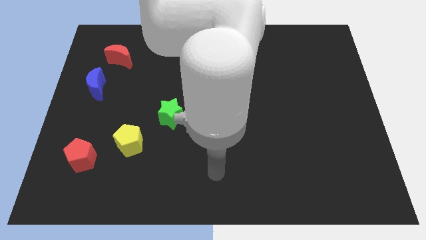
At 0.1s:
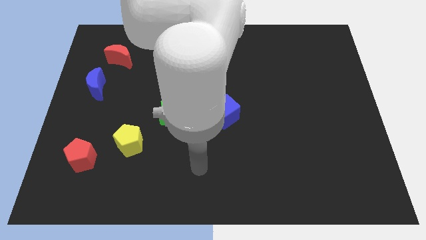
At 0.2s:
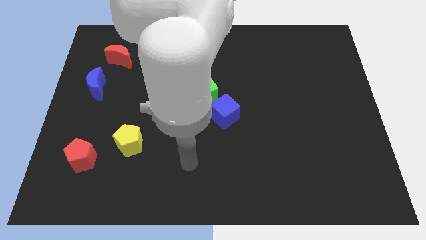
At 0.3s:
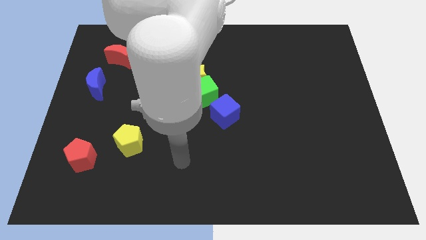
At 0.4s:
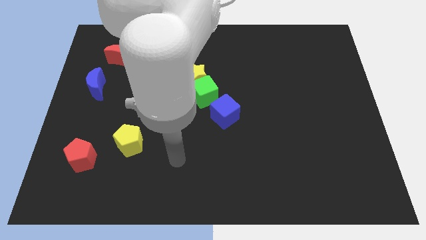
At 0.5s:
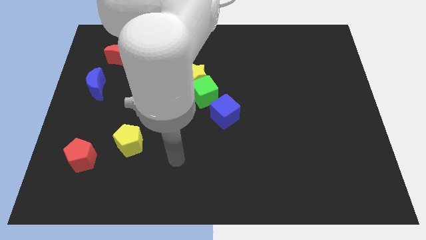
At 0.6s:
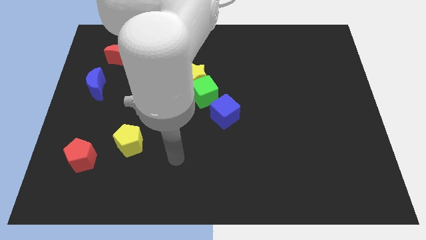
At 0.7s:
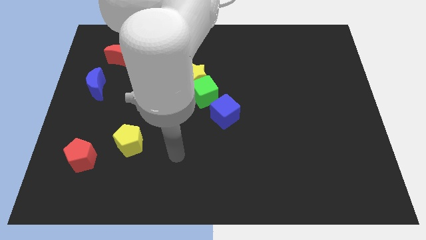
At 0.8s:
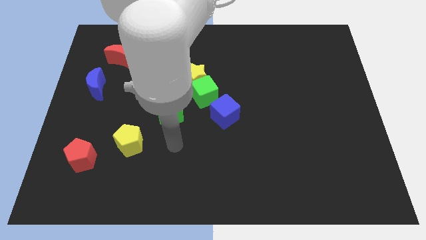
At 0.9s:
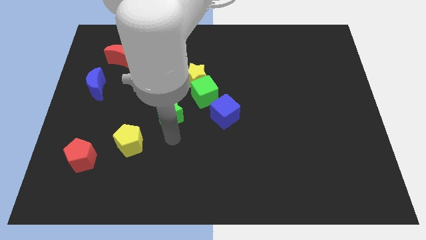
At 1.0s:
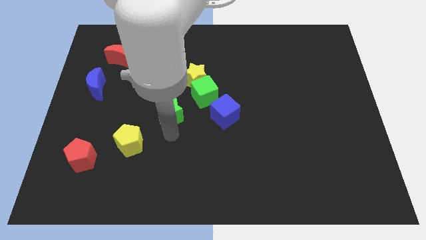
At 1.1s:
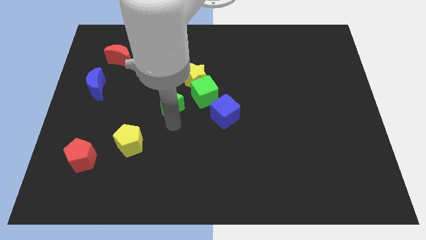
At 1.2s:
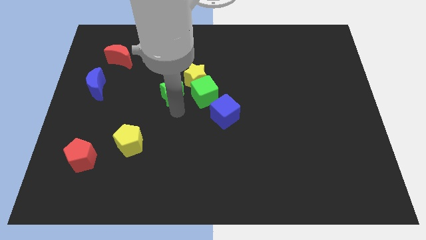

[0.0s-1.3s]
slide the green star parallel left to the green cube

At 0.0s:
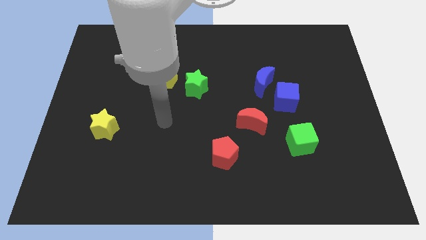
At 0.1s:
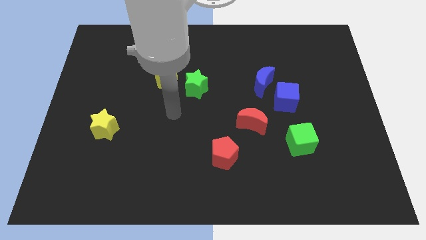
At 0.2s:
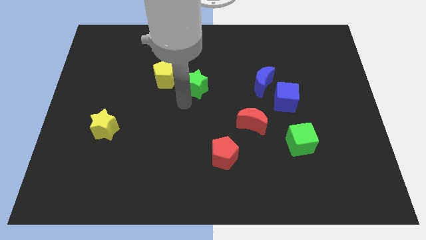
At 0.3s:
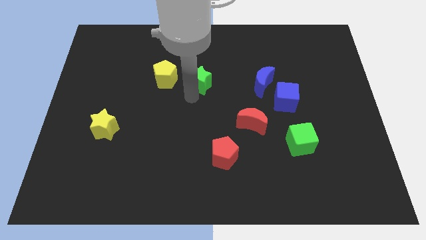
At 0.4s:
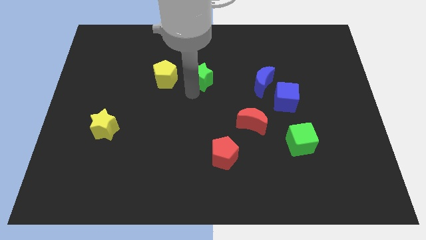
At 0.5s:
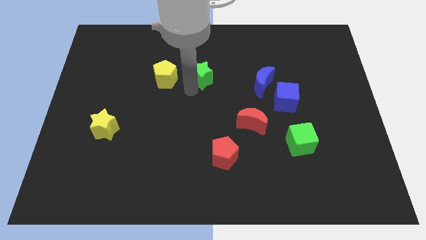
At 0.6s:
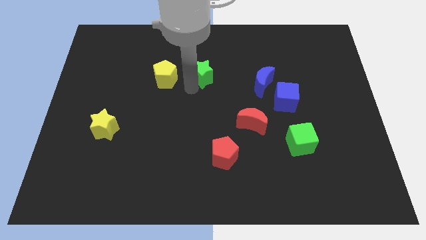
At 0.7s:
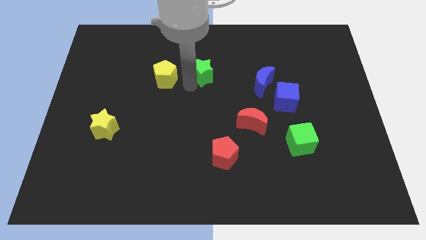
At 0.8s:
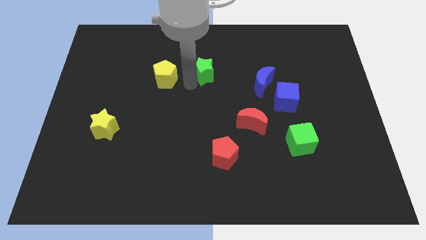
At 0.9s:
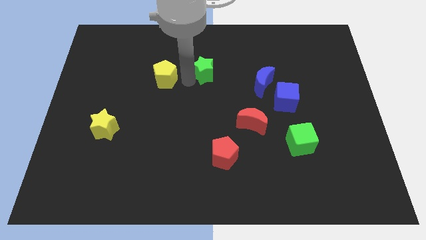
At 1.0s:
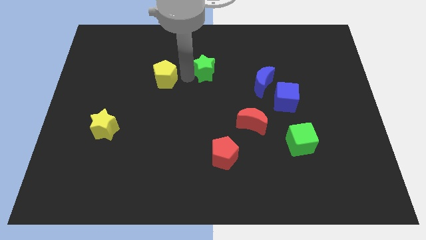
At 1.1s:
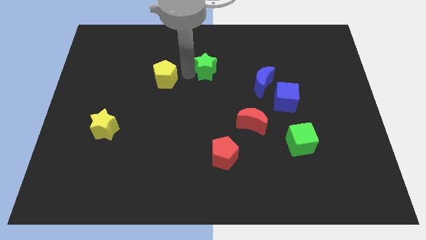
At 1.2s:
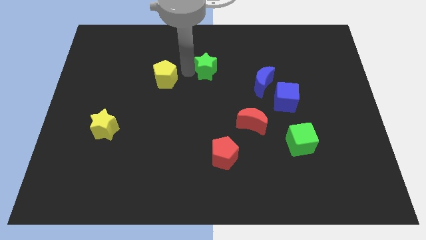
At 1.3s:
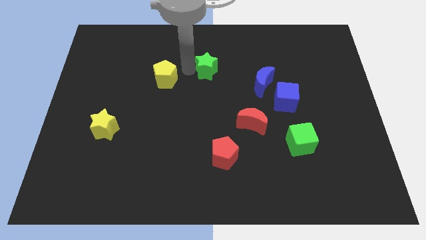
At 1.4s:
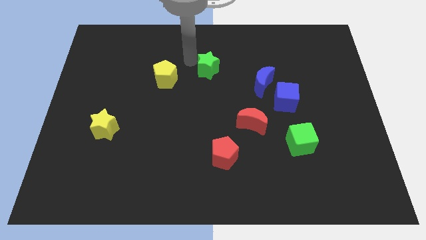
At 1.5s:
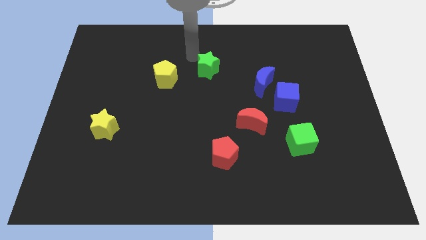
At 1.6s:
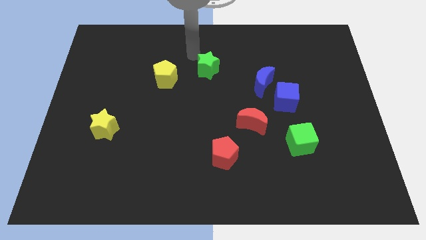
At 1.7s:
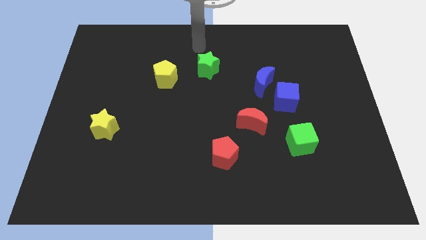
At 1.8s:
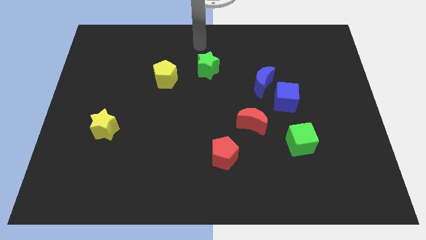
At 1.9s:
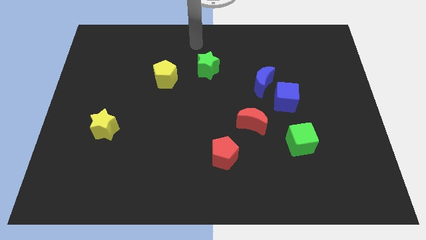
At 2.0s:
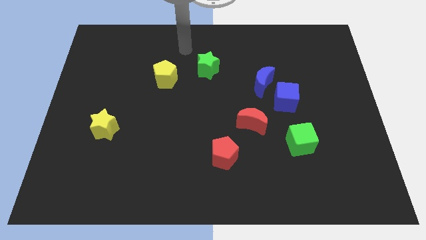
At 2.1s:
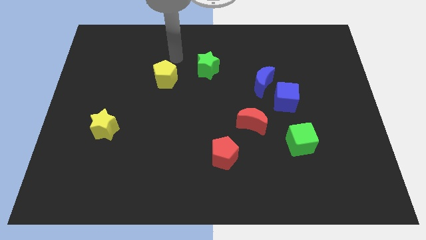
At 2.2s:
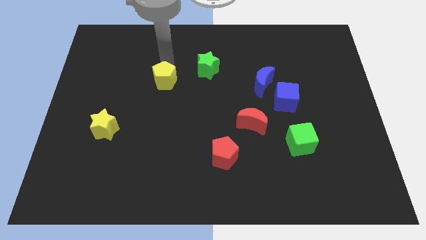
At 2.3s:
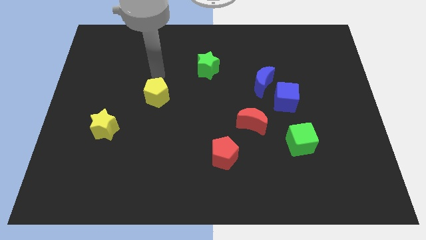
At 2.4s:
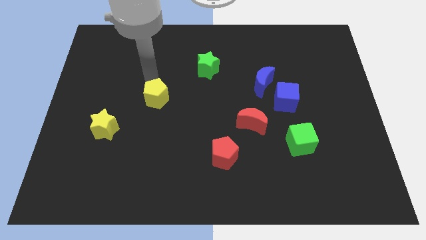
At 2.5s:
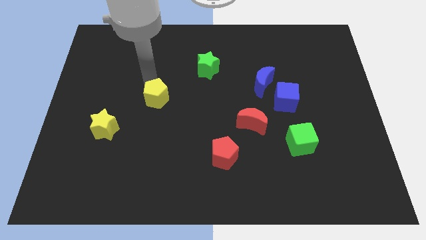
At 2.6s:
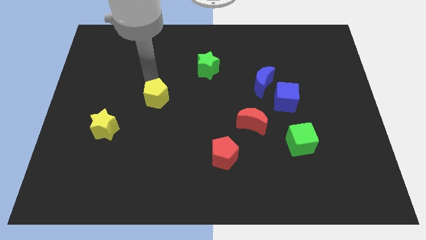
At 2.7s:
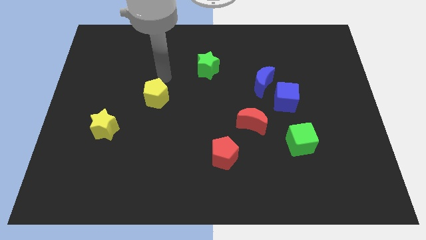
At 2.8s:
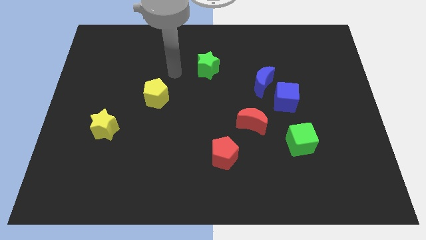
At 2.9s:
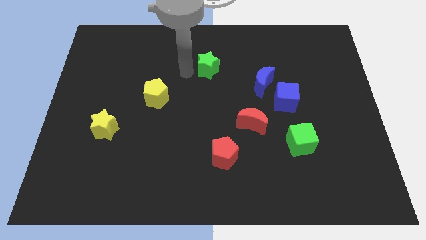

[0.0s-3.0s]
place the yellow pentagon diagonally left bottom of green star

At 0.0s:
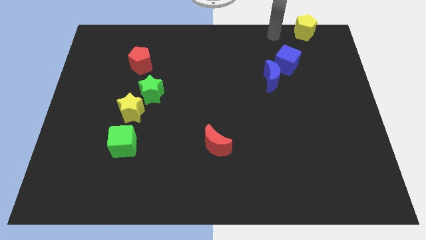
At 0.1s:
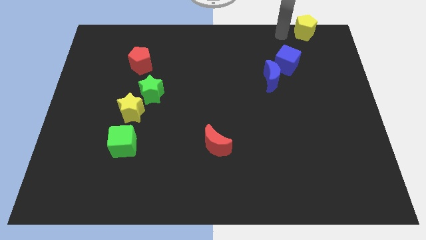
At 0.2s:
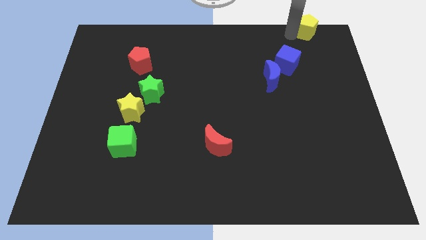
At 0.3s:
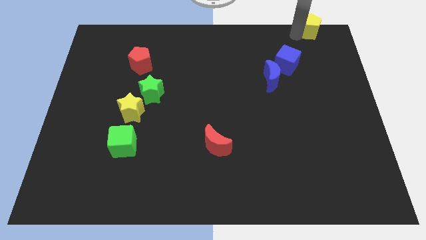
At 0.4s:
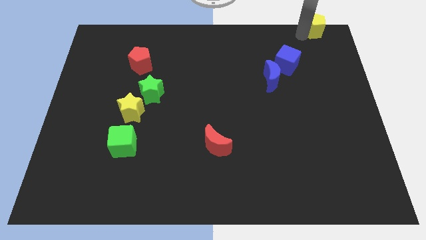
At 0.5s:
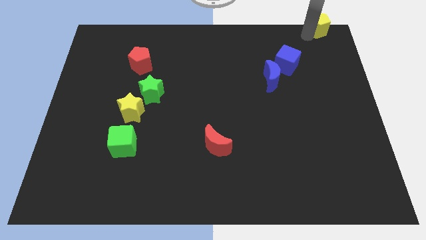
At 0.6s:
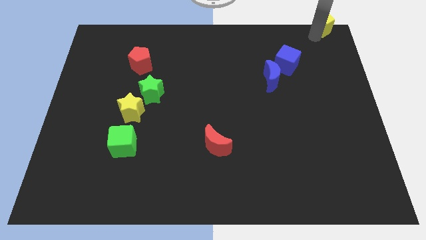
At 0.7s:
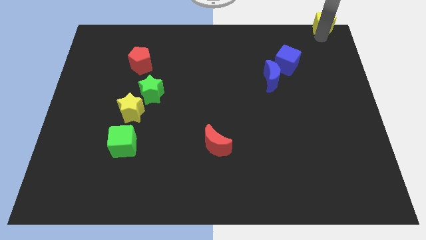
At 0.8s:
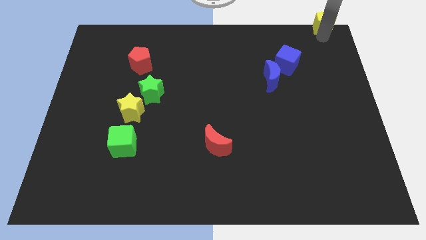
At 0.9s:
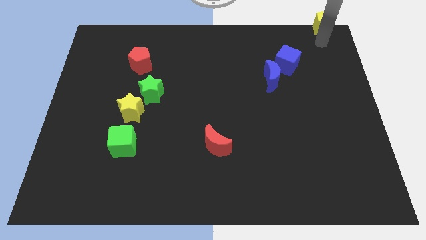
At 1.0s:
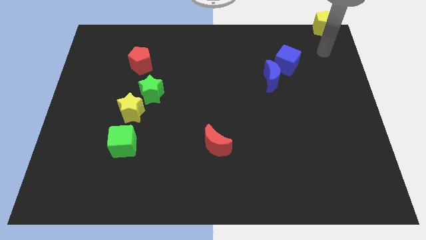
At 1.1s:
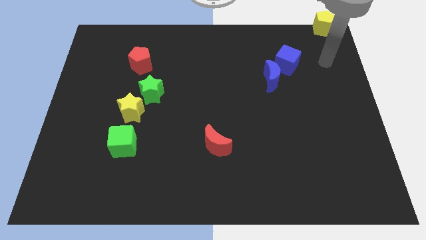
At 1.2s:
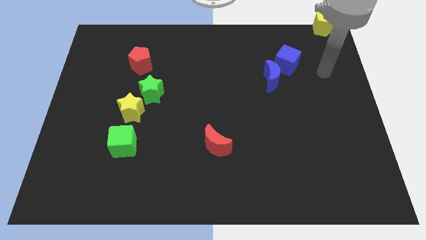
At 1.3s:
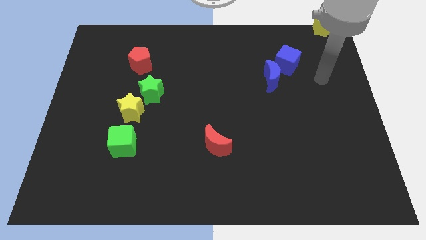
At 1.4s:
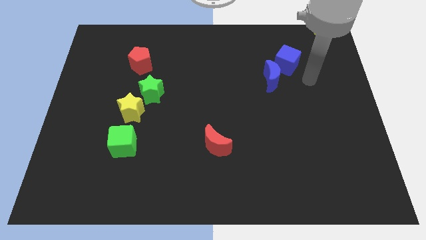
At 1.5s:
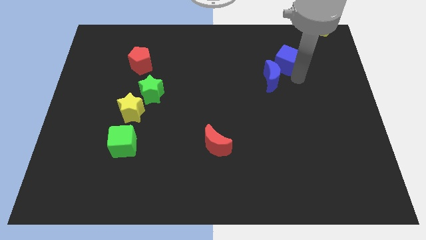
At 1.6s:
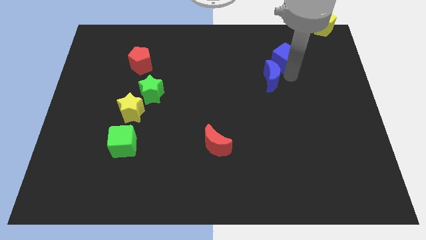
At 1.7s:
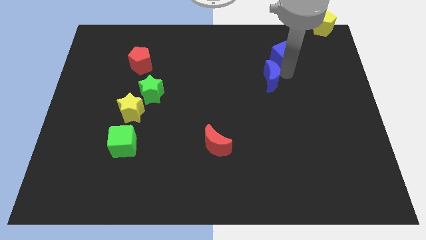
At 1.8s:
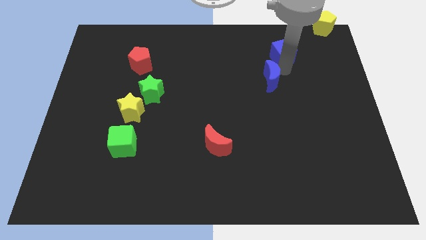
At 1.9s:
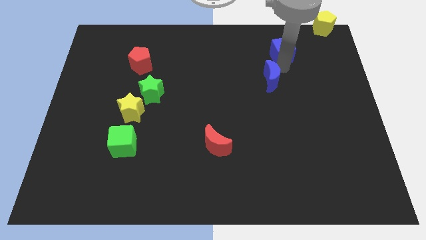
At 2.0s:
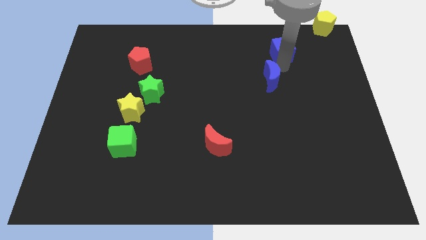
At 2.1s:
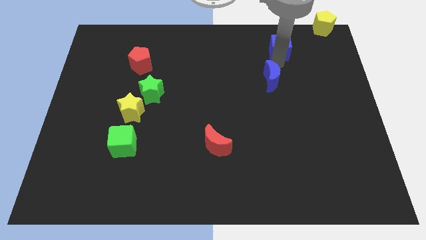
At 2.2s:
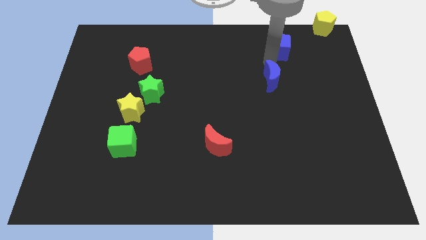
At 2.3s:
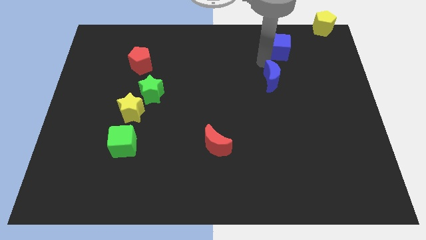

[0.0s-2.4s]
place the blue cube diagonally top right to blue moon

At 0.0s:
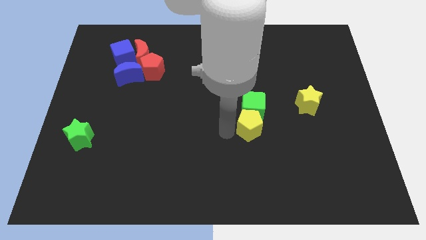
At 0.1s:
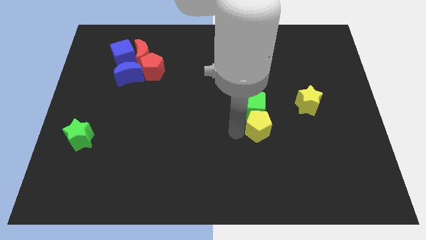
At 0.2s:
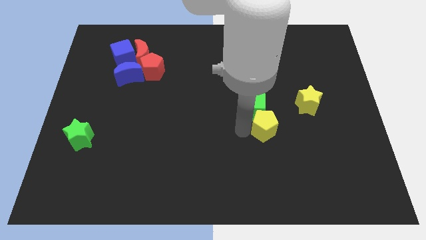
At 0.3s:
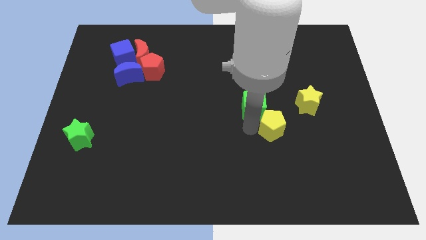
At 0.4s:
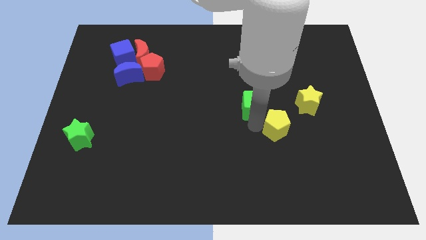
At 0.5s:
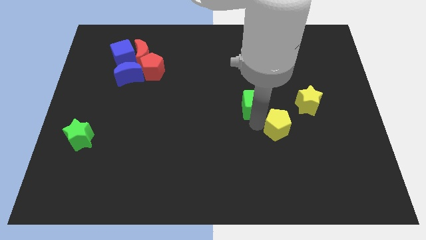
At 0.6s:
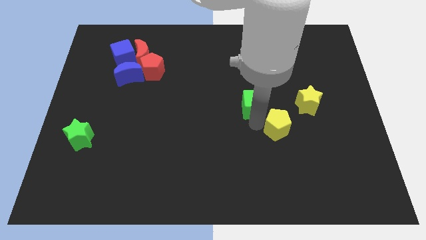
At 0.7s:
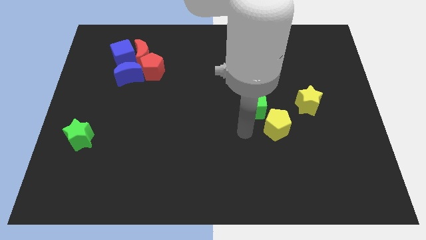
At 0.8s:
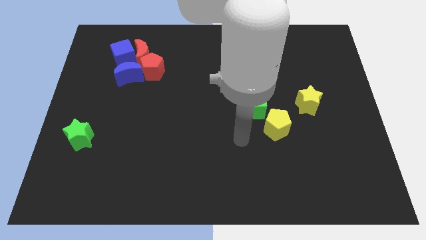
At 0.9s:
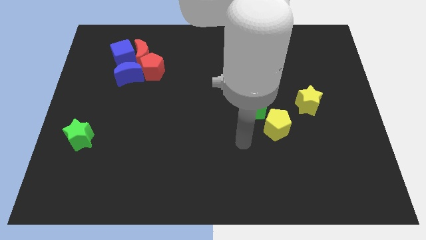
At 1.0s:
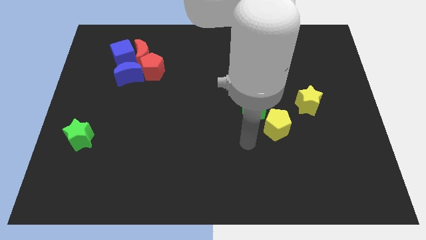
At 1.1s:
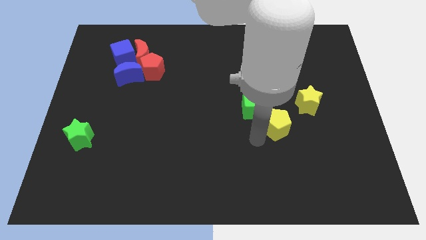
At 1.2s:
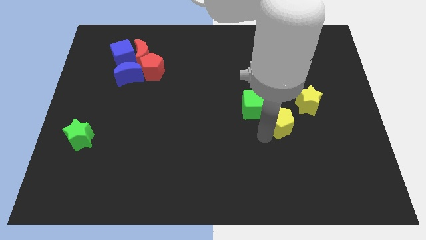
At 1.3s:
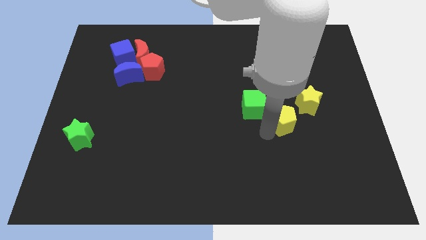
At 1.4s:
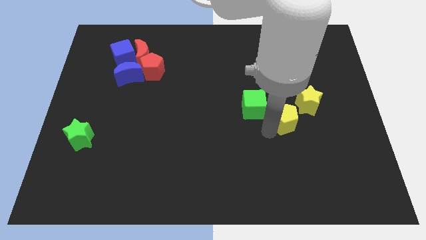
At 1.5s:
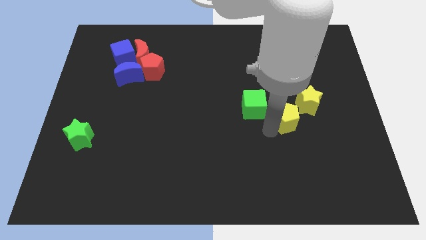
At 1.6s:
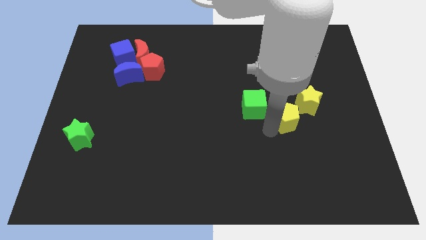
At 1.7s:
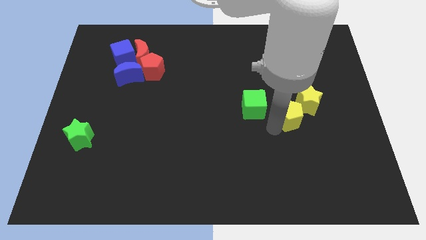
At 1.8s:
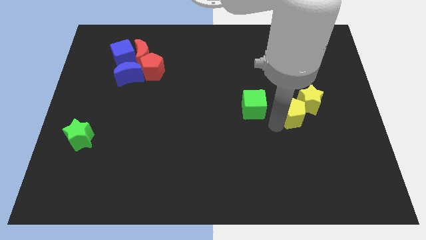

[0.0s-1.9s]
put the yellow pentagon and yellow star together

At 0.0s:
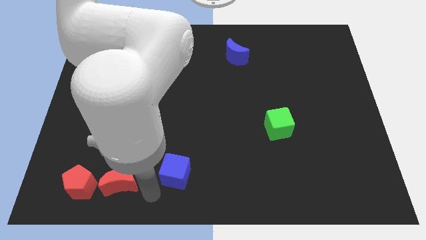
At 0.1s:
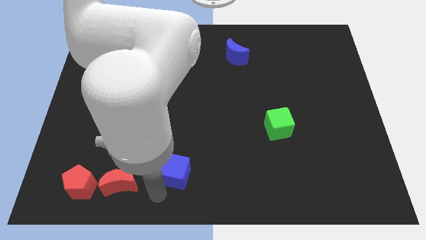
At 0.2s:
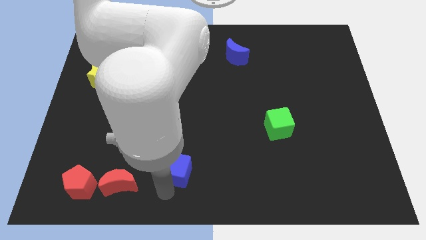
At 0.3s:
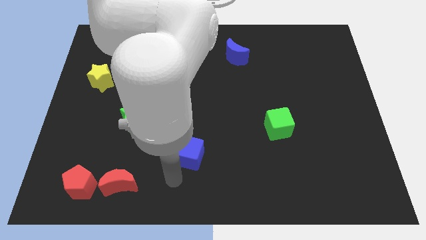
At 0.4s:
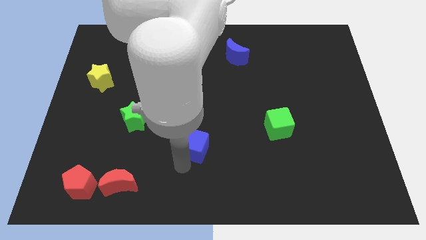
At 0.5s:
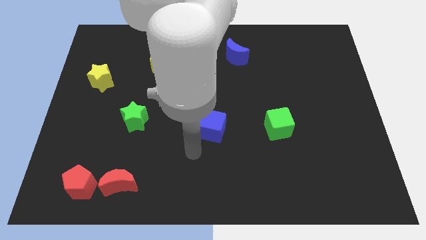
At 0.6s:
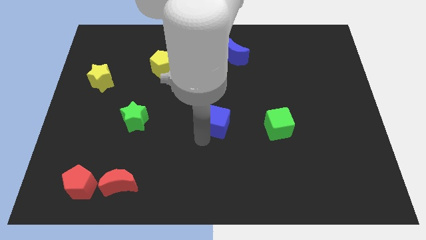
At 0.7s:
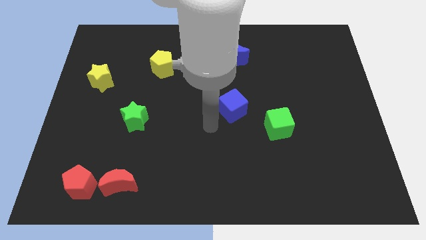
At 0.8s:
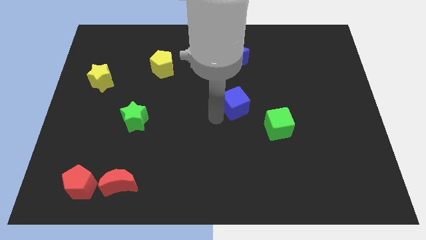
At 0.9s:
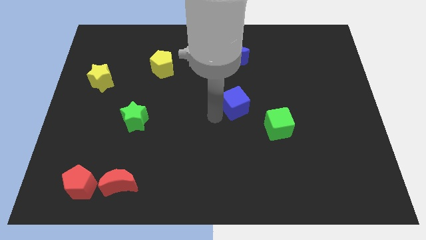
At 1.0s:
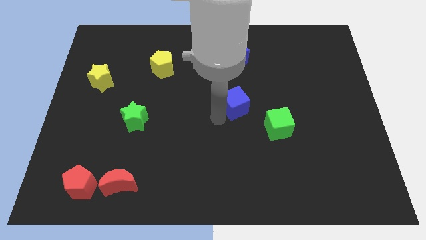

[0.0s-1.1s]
push the blue cube towards the top of the board
